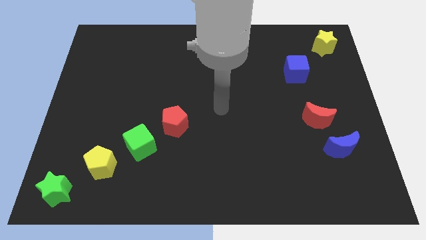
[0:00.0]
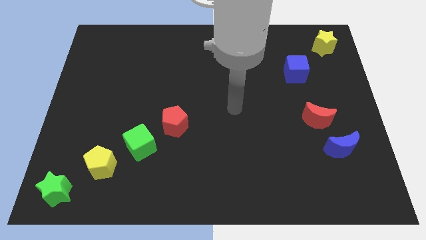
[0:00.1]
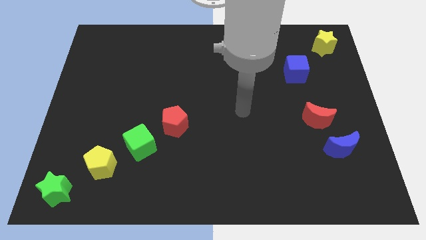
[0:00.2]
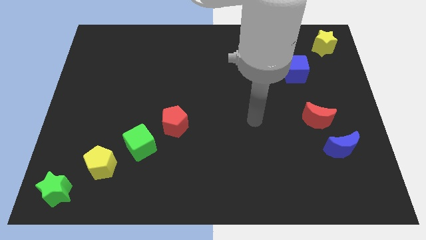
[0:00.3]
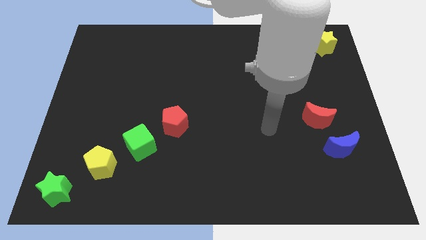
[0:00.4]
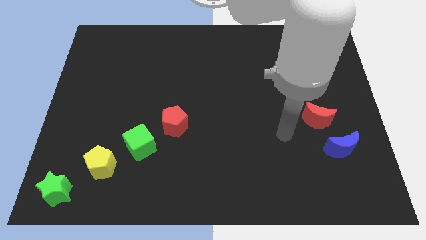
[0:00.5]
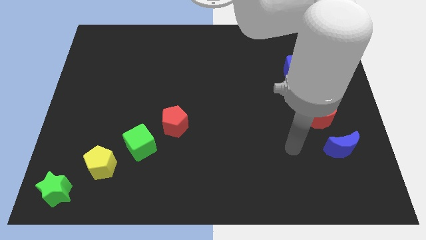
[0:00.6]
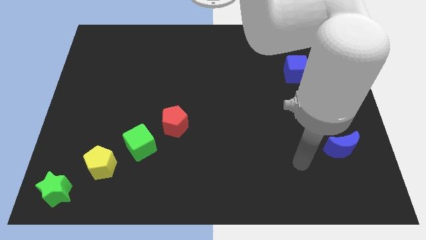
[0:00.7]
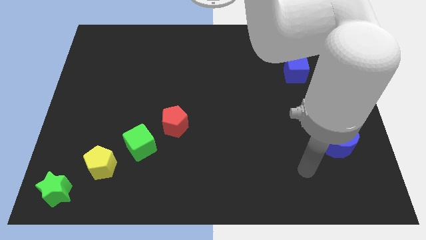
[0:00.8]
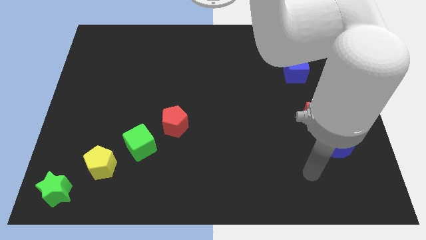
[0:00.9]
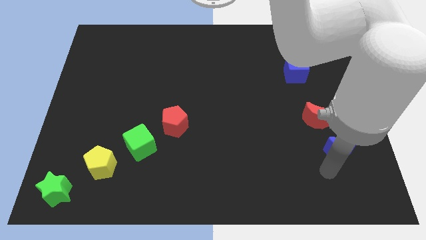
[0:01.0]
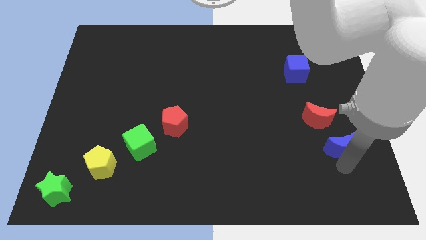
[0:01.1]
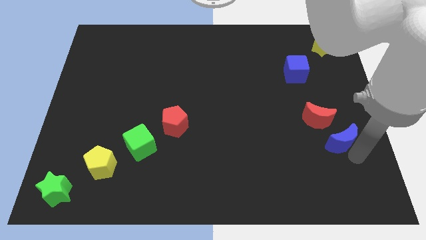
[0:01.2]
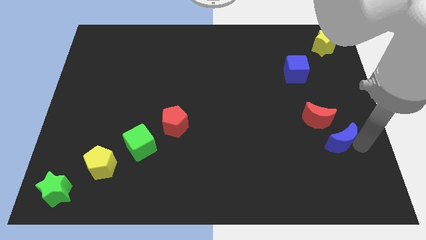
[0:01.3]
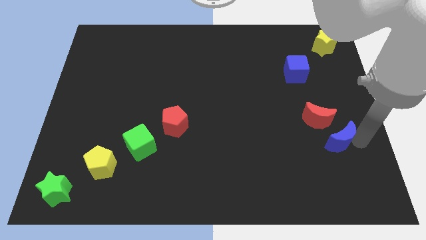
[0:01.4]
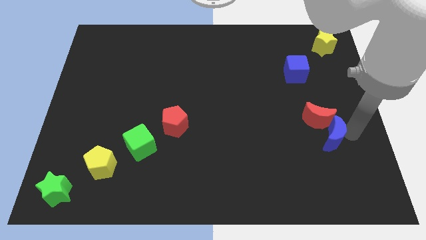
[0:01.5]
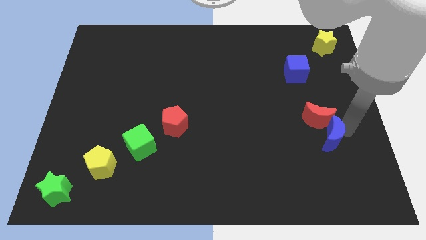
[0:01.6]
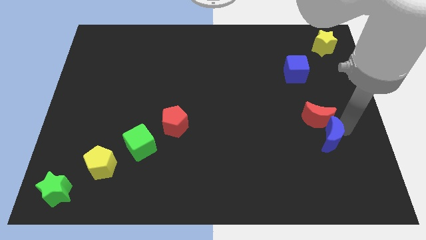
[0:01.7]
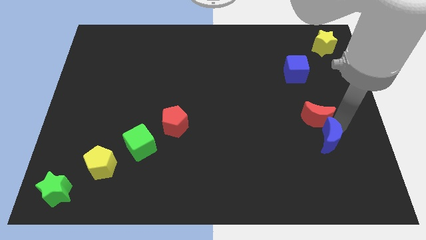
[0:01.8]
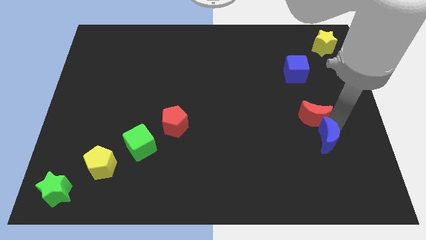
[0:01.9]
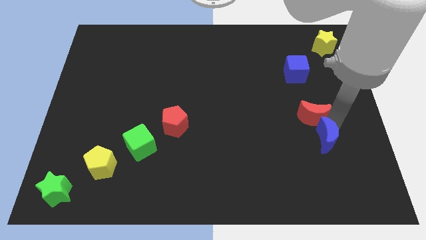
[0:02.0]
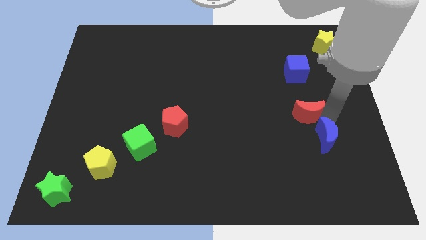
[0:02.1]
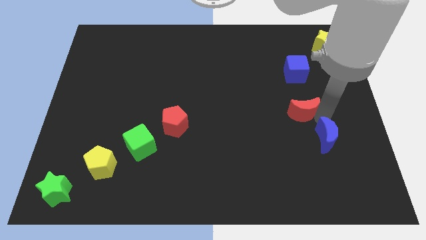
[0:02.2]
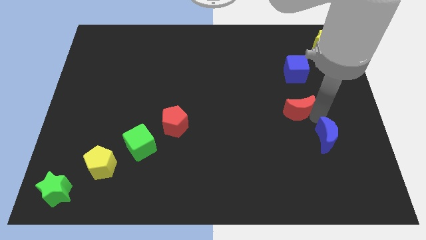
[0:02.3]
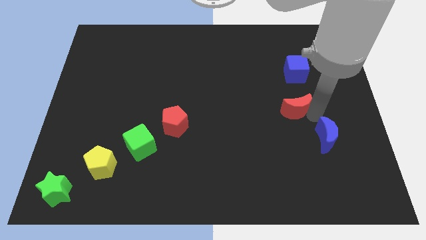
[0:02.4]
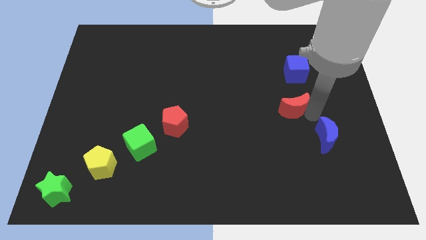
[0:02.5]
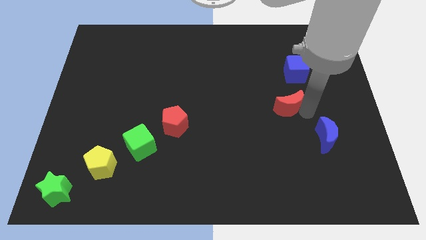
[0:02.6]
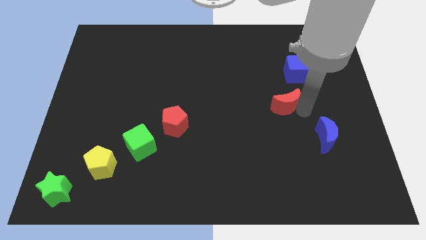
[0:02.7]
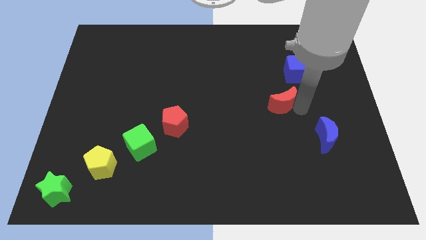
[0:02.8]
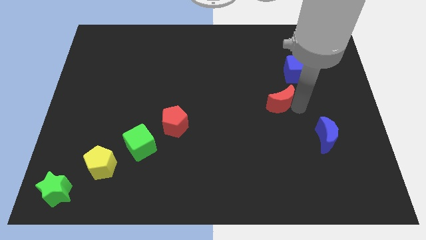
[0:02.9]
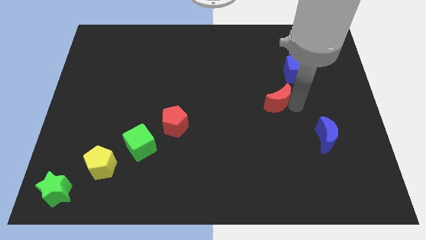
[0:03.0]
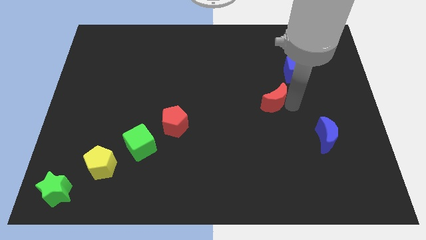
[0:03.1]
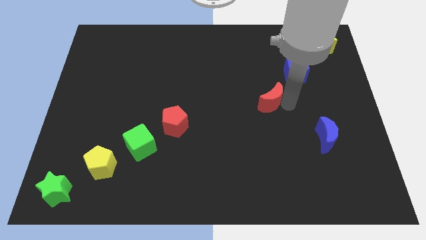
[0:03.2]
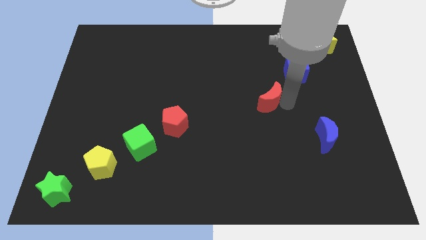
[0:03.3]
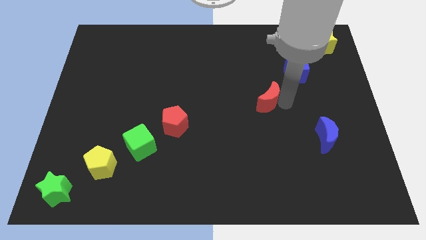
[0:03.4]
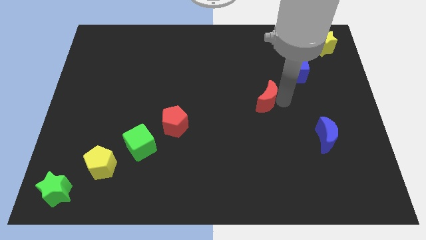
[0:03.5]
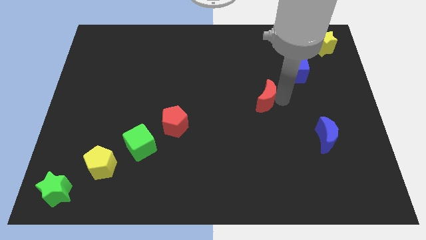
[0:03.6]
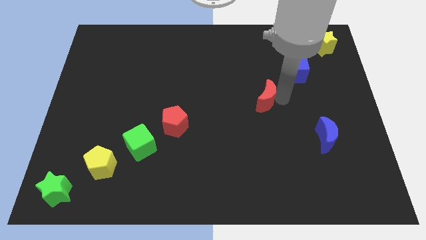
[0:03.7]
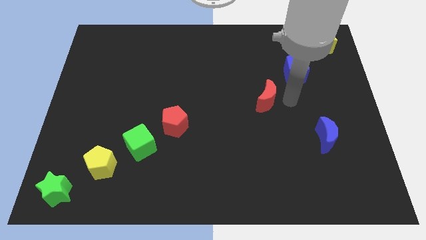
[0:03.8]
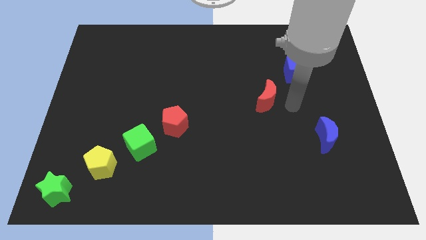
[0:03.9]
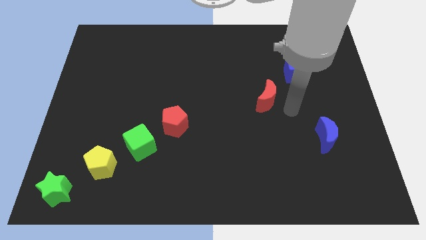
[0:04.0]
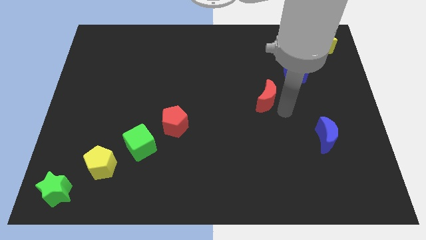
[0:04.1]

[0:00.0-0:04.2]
separate the red crescent from blue crescent

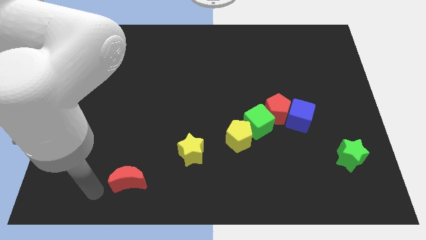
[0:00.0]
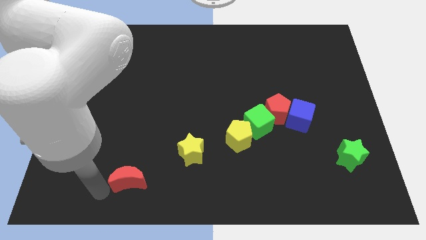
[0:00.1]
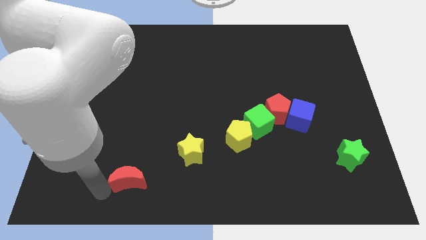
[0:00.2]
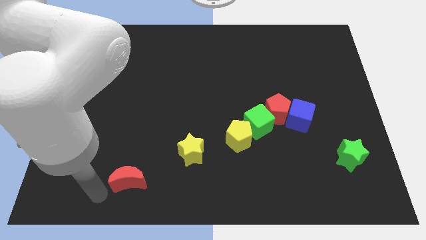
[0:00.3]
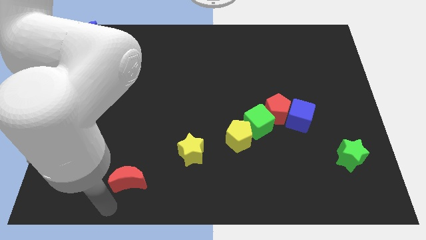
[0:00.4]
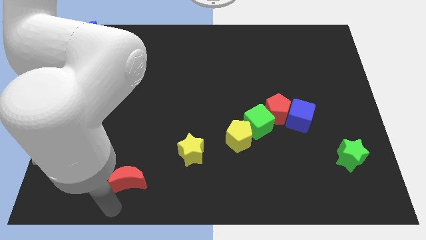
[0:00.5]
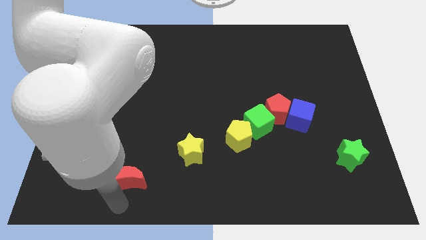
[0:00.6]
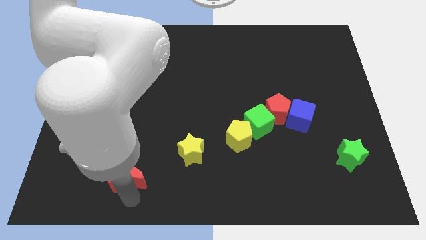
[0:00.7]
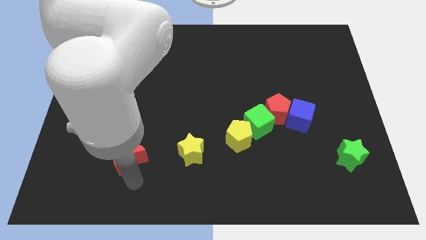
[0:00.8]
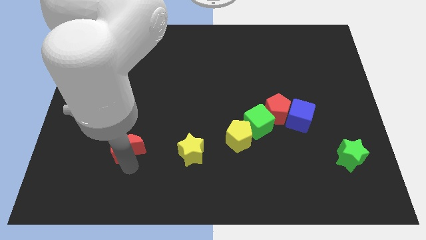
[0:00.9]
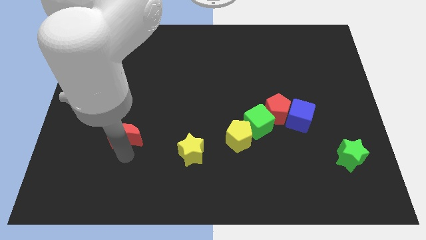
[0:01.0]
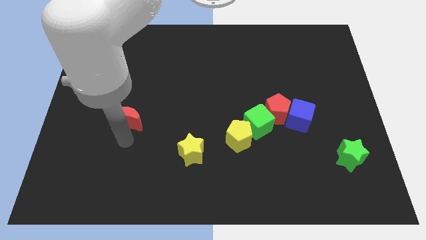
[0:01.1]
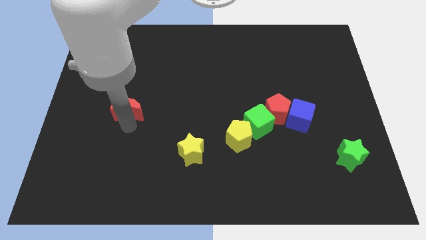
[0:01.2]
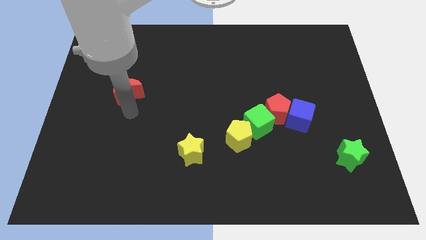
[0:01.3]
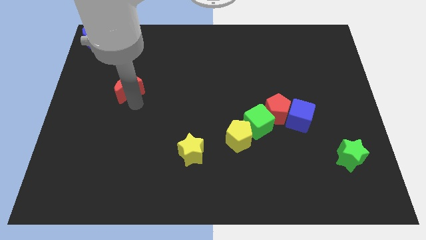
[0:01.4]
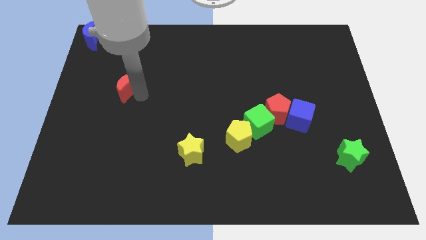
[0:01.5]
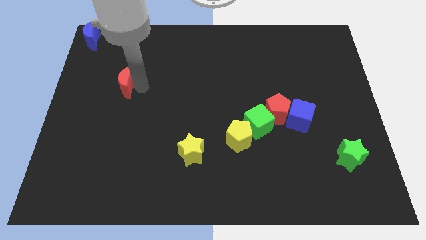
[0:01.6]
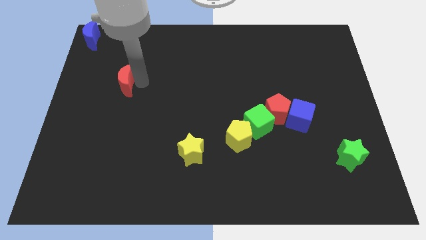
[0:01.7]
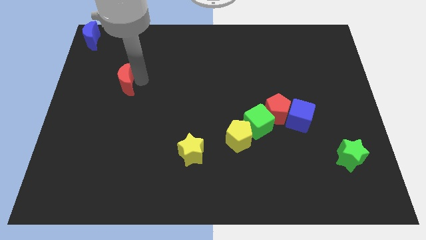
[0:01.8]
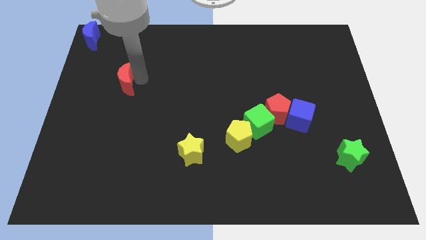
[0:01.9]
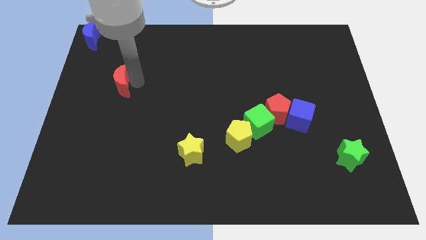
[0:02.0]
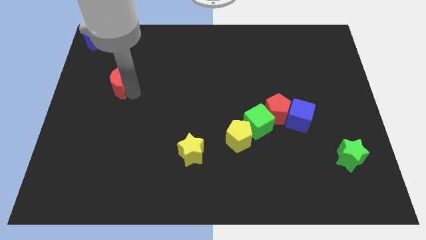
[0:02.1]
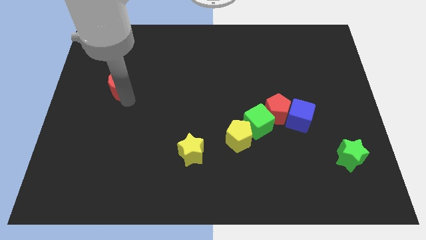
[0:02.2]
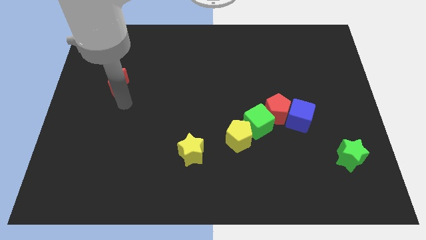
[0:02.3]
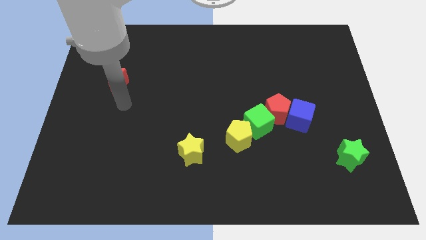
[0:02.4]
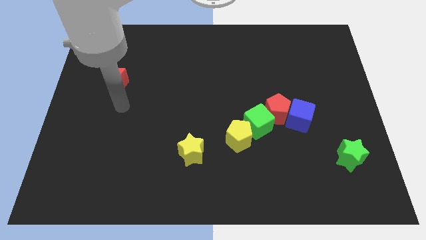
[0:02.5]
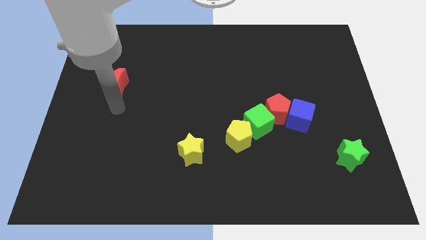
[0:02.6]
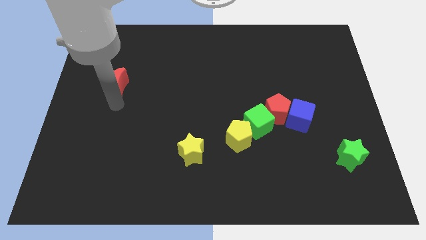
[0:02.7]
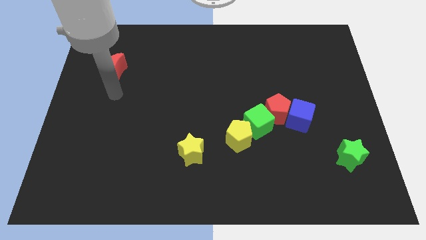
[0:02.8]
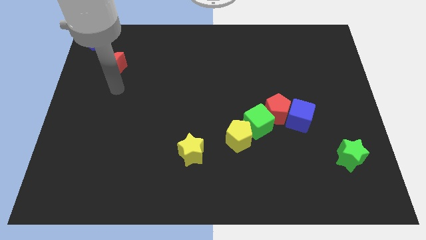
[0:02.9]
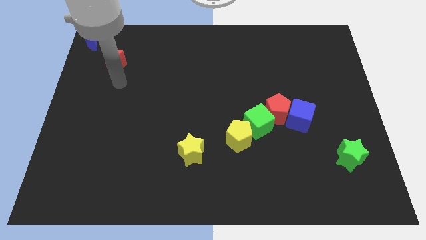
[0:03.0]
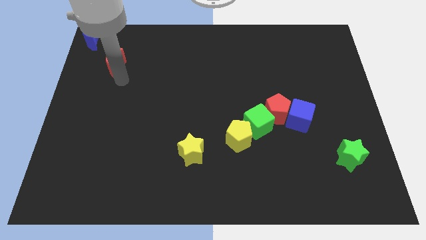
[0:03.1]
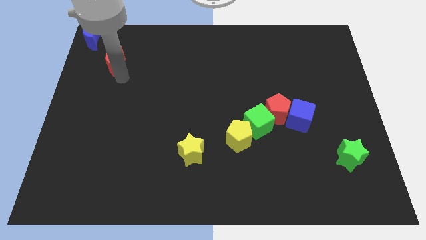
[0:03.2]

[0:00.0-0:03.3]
push red moon upwards

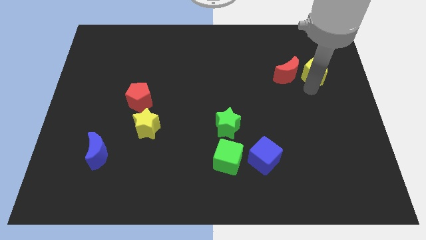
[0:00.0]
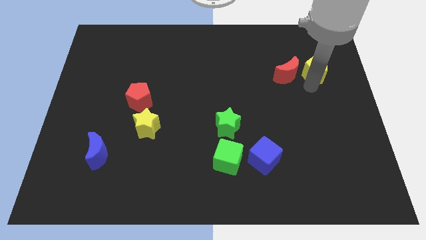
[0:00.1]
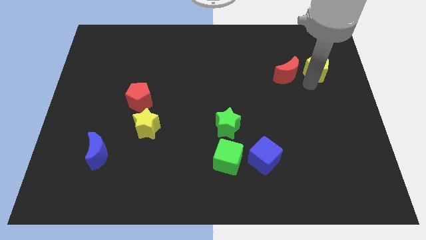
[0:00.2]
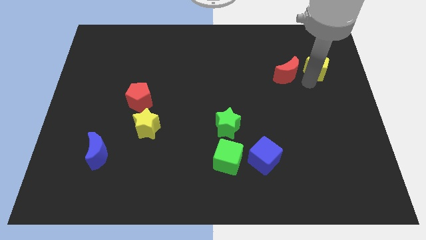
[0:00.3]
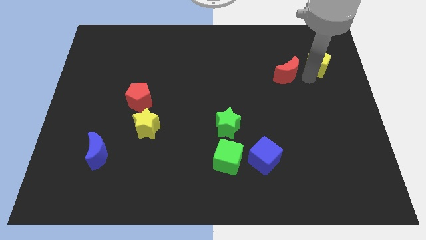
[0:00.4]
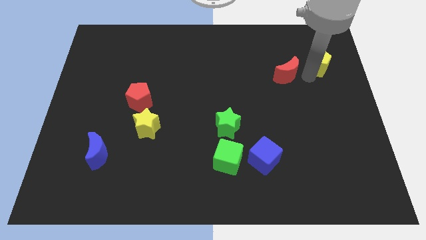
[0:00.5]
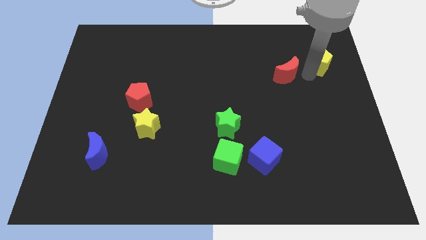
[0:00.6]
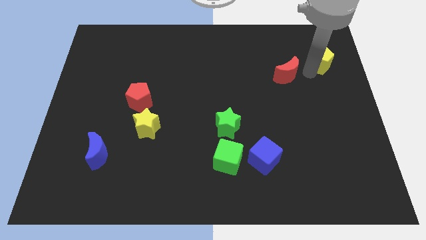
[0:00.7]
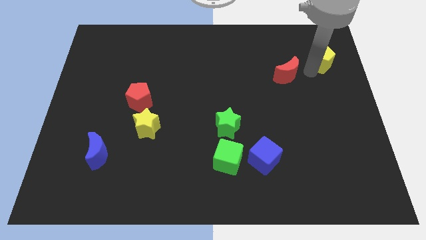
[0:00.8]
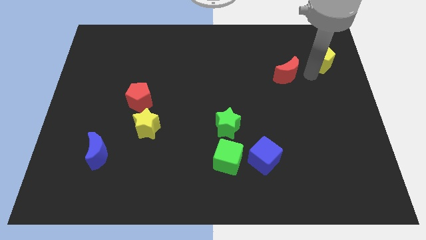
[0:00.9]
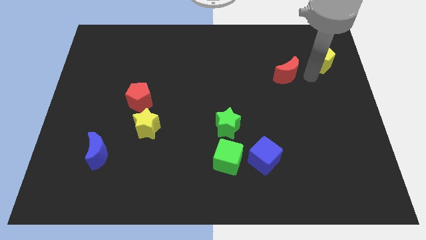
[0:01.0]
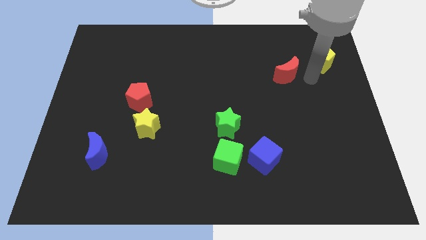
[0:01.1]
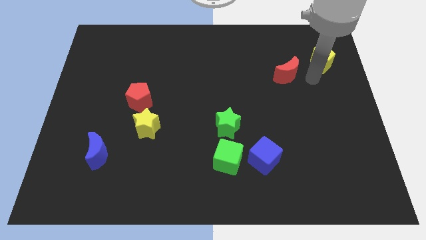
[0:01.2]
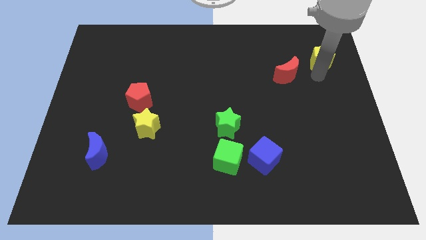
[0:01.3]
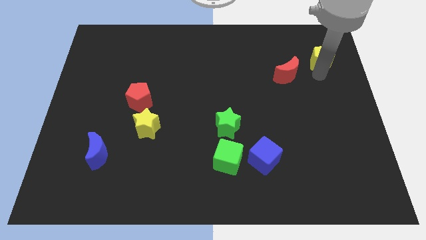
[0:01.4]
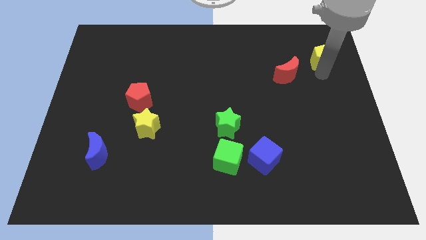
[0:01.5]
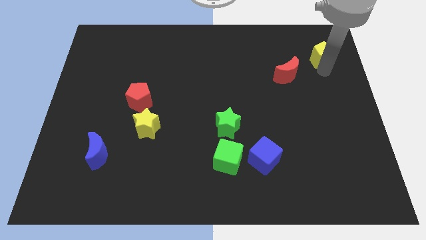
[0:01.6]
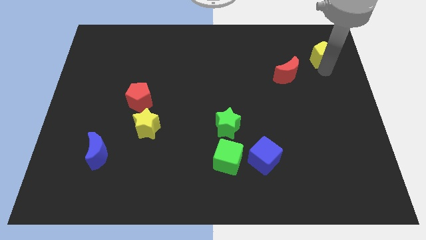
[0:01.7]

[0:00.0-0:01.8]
push the yellow pentagon slightly up
